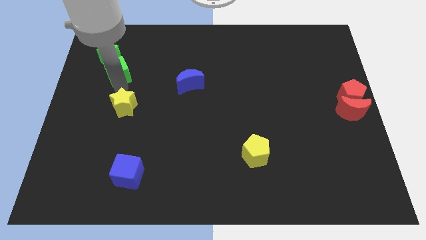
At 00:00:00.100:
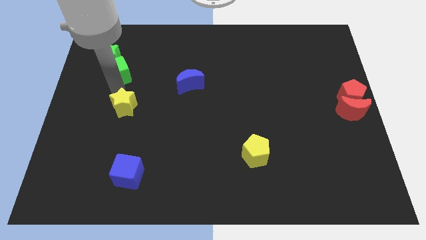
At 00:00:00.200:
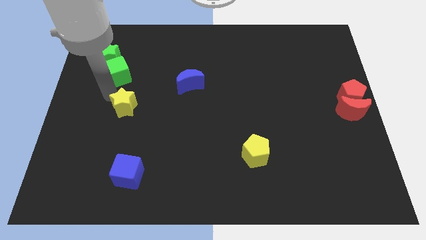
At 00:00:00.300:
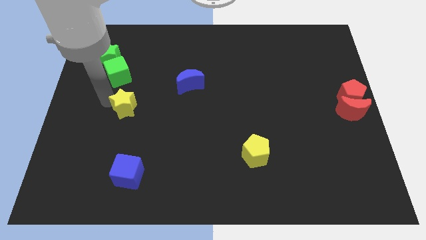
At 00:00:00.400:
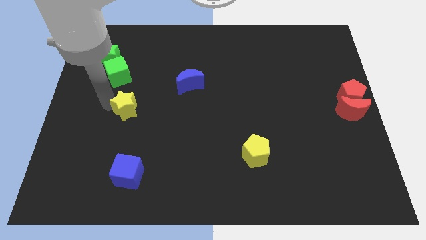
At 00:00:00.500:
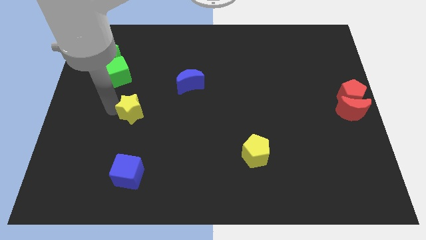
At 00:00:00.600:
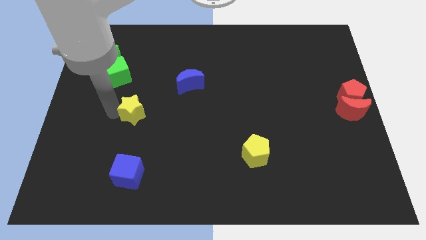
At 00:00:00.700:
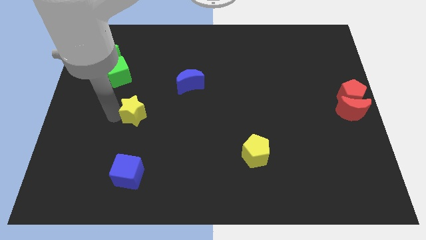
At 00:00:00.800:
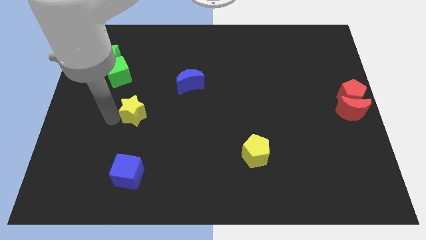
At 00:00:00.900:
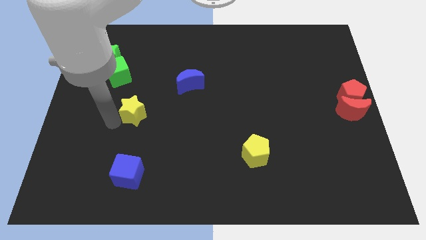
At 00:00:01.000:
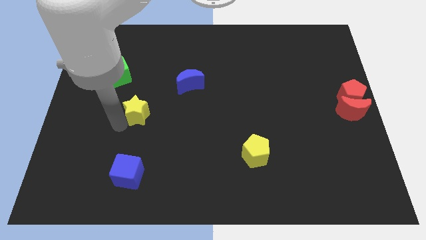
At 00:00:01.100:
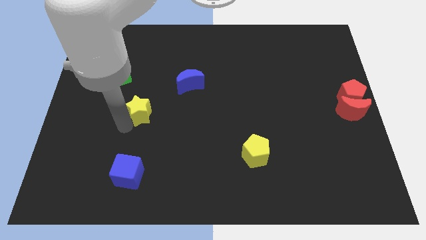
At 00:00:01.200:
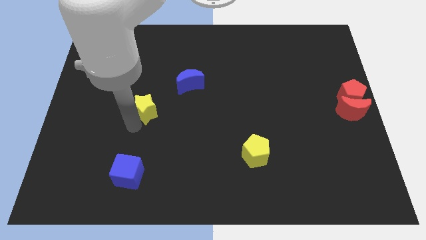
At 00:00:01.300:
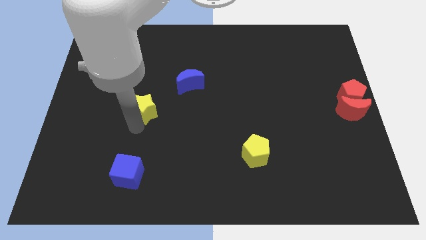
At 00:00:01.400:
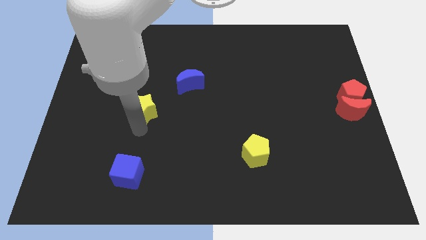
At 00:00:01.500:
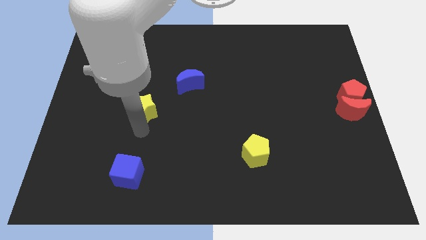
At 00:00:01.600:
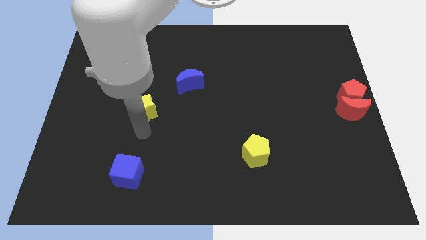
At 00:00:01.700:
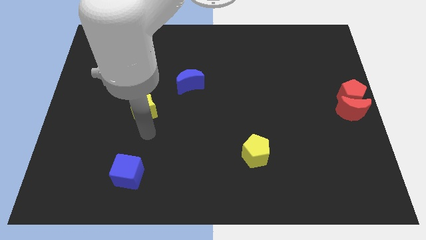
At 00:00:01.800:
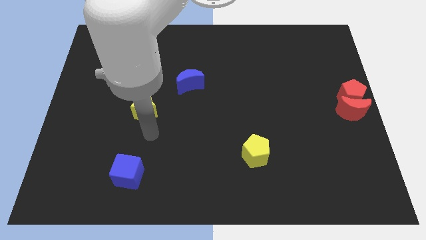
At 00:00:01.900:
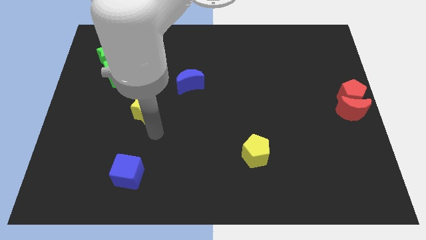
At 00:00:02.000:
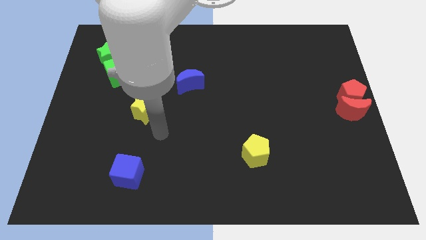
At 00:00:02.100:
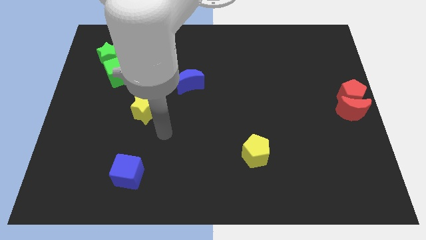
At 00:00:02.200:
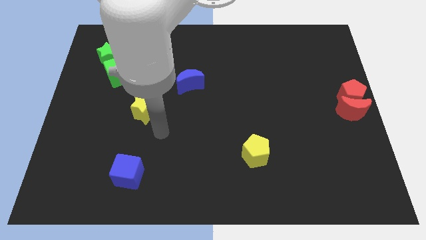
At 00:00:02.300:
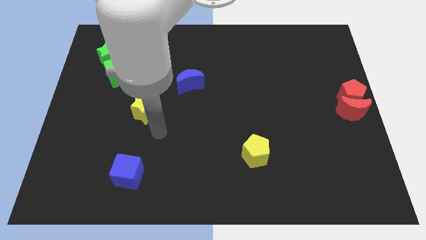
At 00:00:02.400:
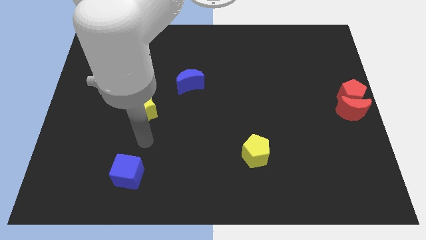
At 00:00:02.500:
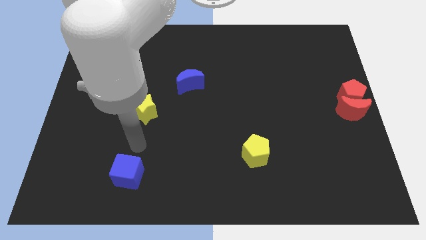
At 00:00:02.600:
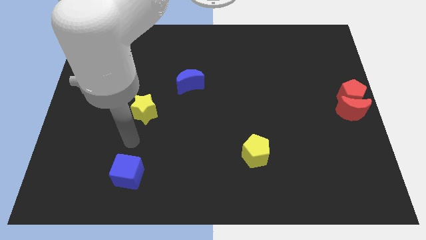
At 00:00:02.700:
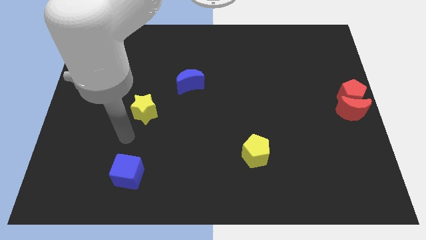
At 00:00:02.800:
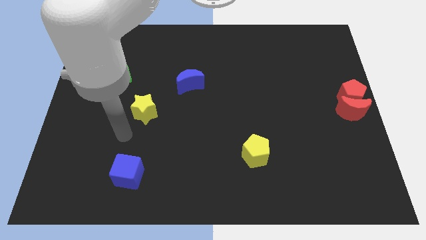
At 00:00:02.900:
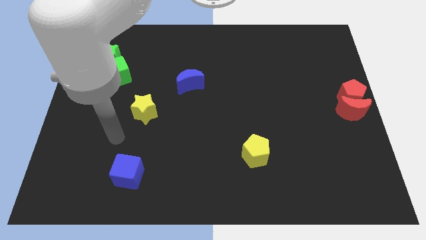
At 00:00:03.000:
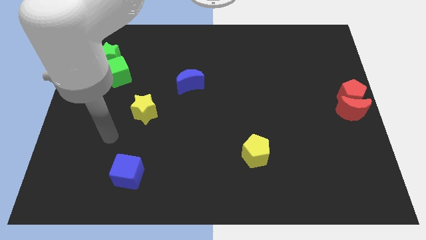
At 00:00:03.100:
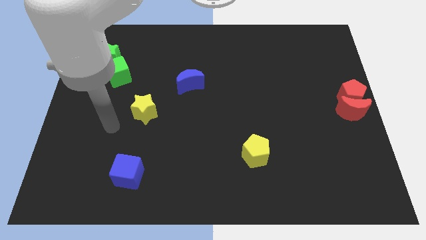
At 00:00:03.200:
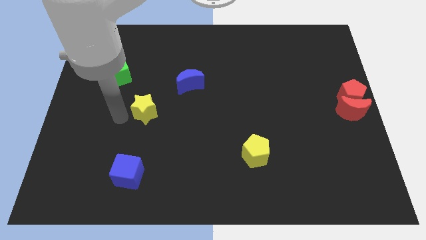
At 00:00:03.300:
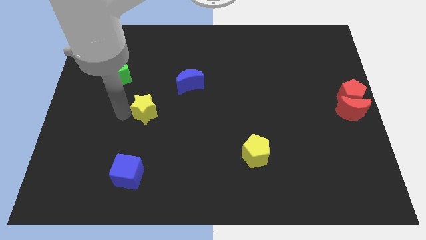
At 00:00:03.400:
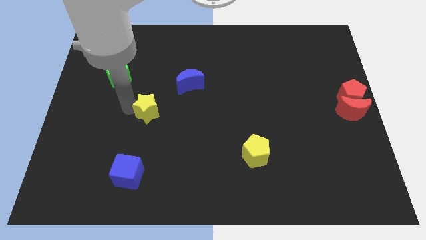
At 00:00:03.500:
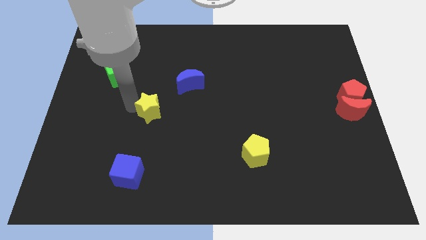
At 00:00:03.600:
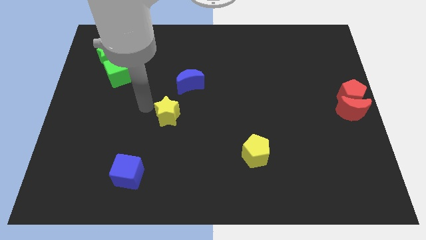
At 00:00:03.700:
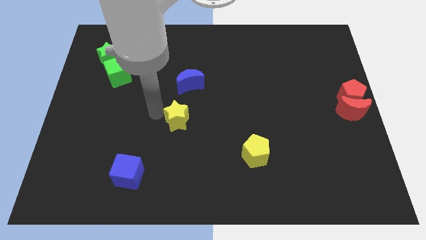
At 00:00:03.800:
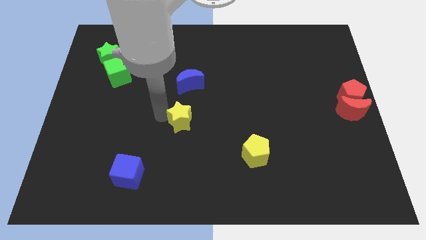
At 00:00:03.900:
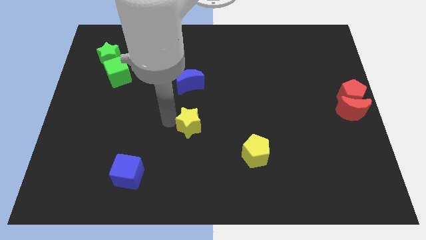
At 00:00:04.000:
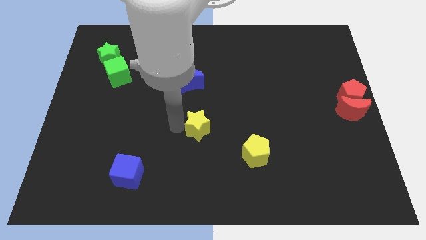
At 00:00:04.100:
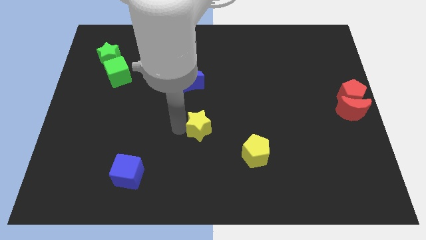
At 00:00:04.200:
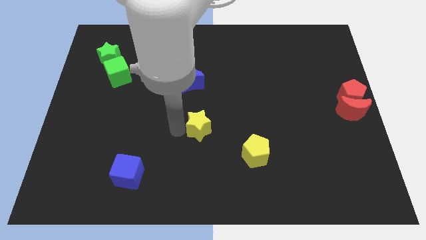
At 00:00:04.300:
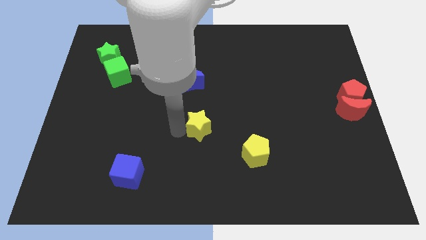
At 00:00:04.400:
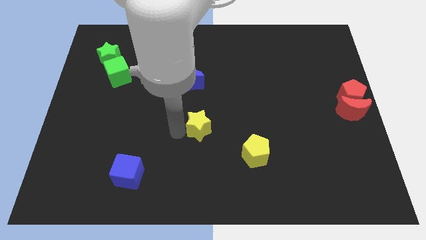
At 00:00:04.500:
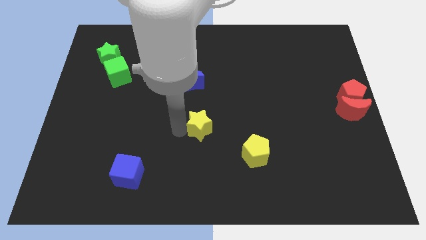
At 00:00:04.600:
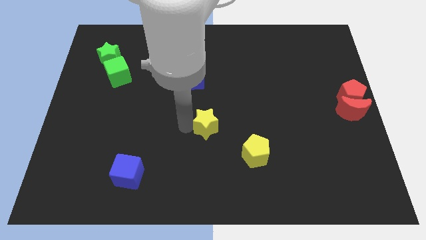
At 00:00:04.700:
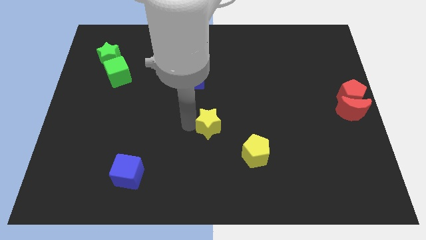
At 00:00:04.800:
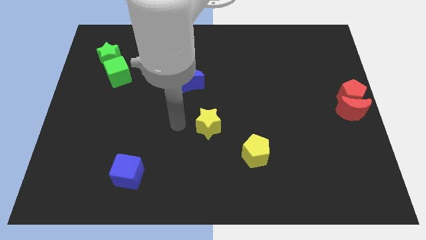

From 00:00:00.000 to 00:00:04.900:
push the yellow star diagonally to the top left of the yellow pentagon

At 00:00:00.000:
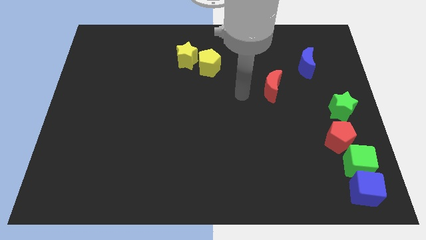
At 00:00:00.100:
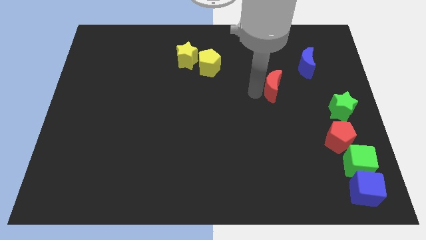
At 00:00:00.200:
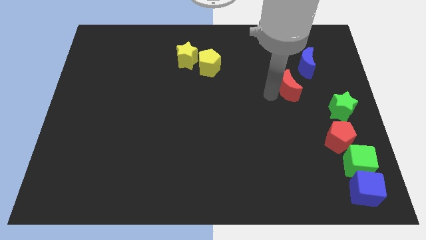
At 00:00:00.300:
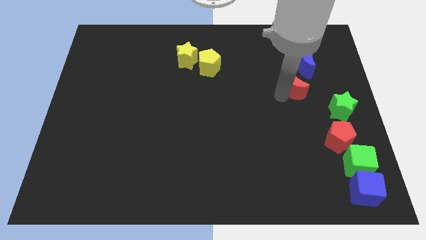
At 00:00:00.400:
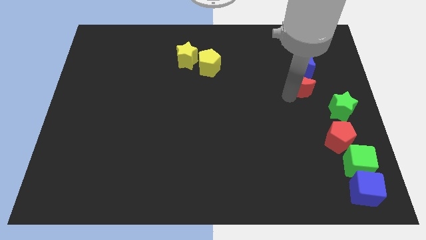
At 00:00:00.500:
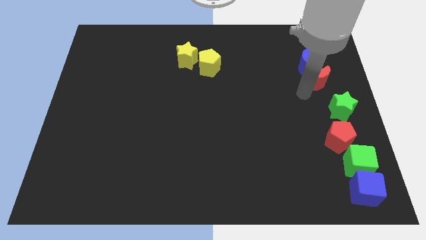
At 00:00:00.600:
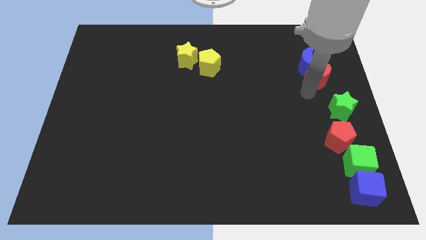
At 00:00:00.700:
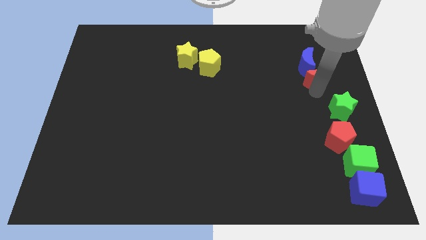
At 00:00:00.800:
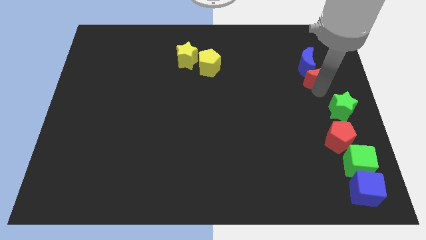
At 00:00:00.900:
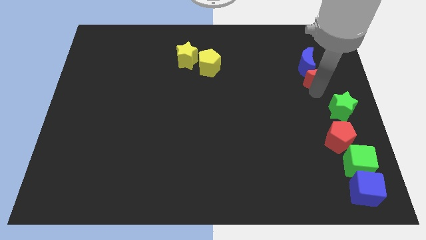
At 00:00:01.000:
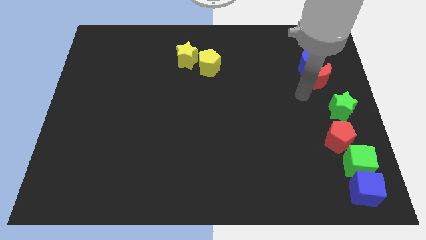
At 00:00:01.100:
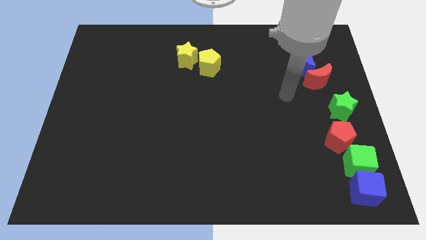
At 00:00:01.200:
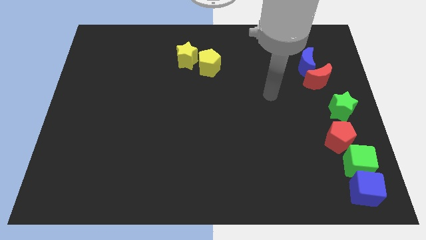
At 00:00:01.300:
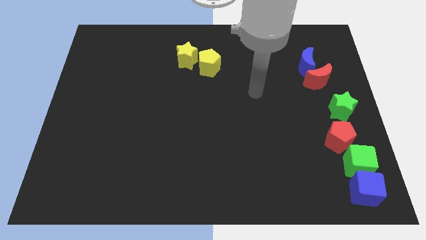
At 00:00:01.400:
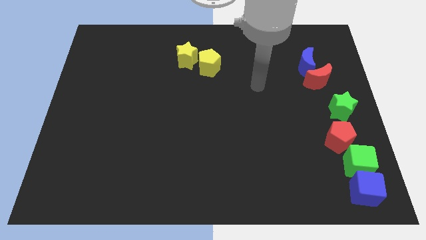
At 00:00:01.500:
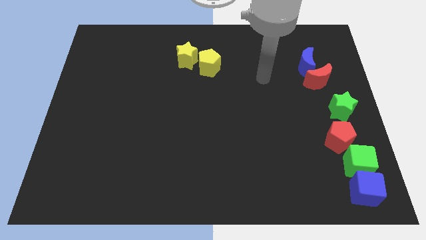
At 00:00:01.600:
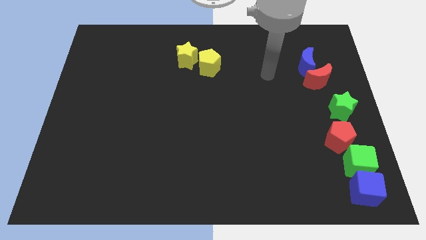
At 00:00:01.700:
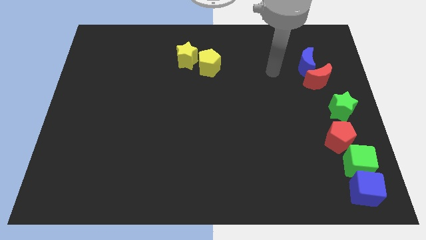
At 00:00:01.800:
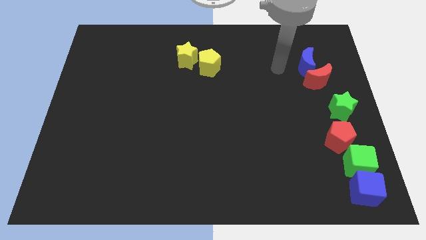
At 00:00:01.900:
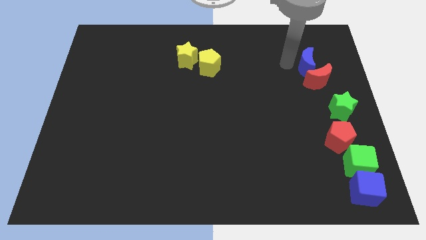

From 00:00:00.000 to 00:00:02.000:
push the red moon below the blue moon

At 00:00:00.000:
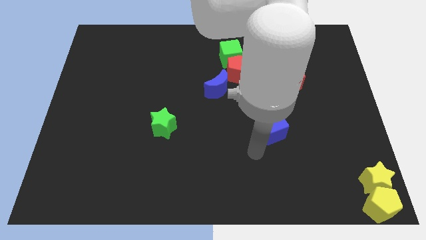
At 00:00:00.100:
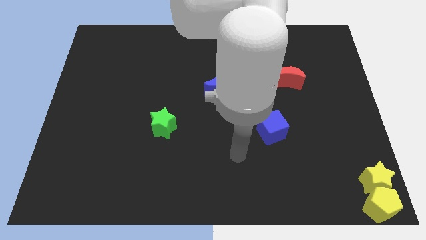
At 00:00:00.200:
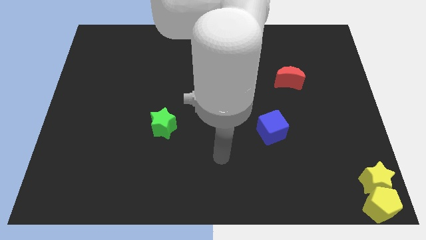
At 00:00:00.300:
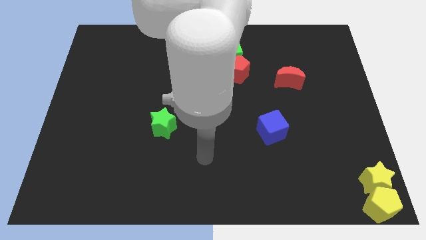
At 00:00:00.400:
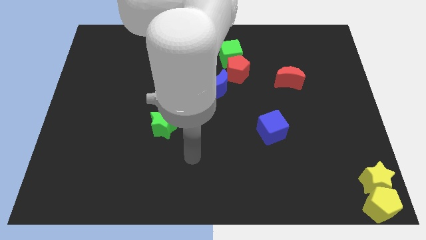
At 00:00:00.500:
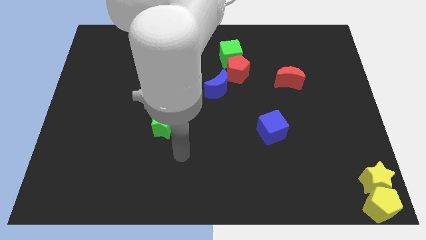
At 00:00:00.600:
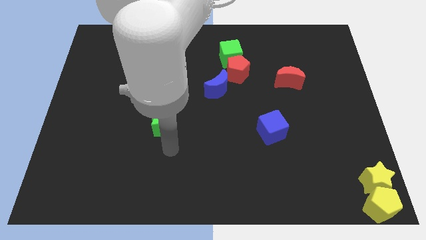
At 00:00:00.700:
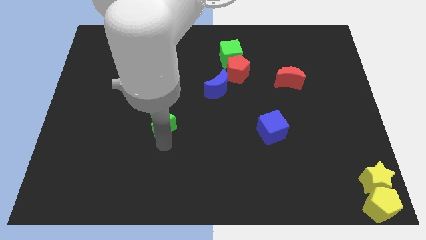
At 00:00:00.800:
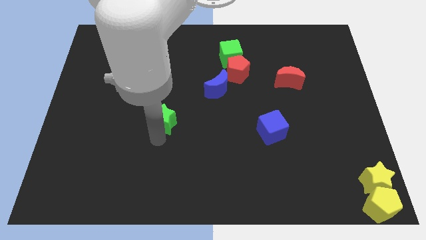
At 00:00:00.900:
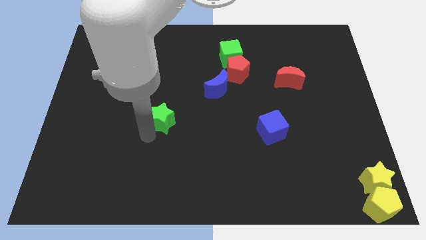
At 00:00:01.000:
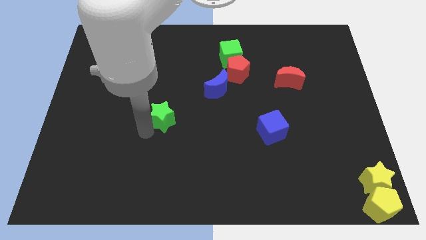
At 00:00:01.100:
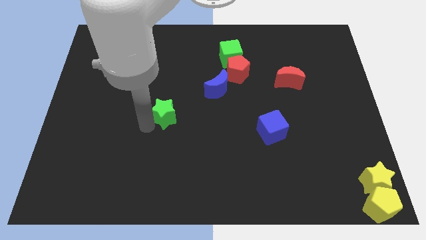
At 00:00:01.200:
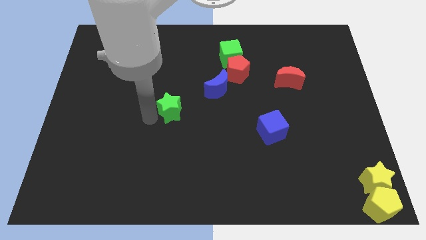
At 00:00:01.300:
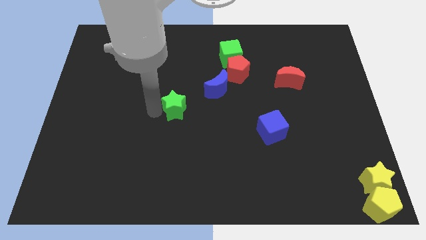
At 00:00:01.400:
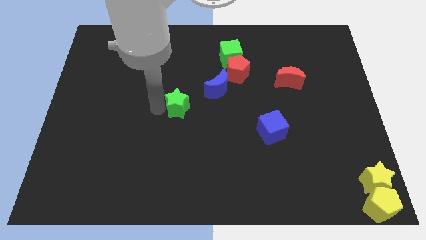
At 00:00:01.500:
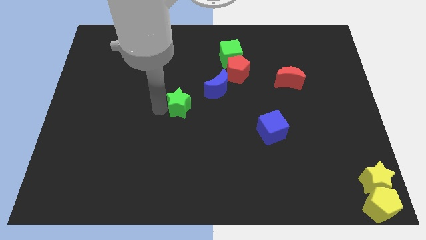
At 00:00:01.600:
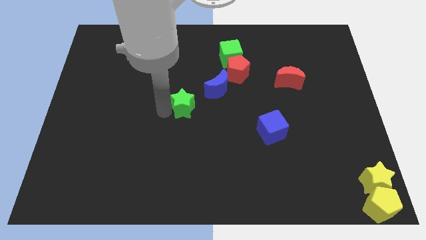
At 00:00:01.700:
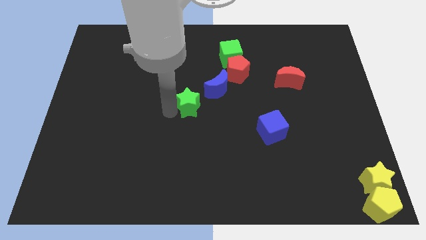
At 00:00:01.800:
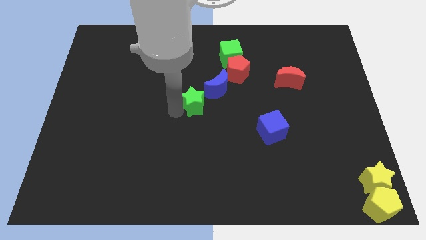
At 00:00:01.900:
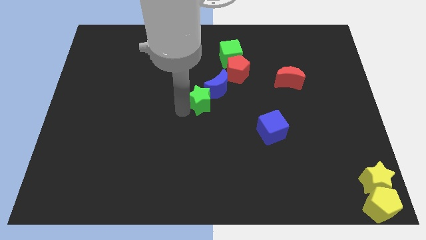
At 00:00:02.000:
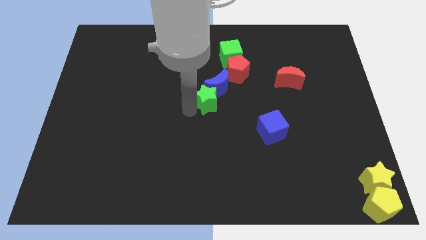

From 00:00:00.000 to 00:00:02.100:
move the green star to the bottom of blue moon
